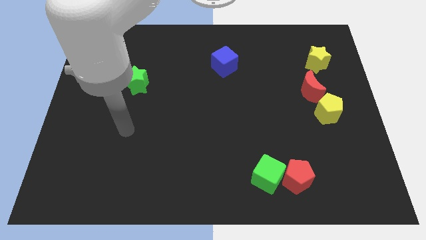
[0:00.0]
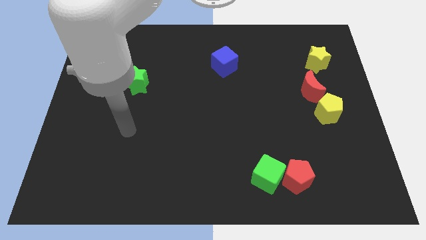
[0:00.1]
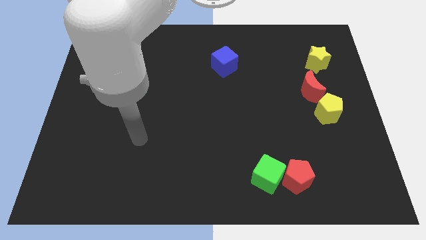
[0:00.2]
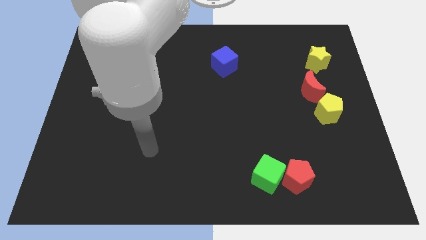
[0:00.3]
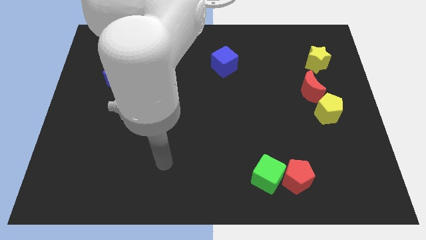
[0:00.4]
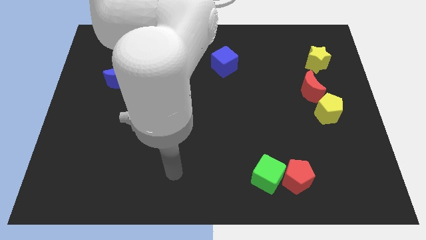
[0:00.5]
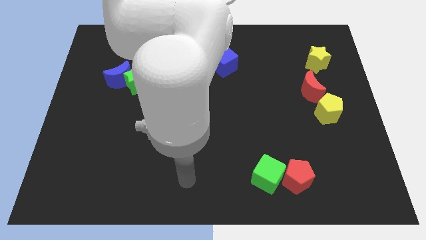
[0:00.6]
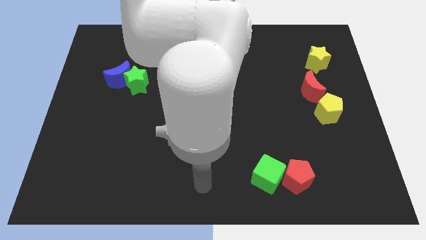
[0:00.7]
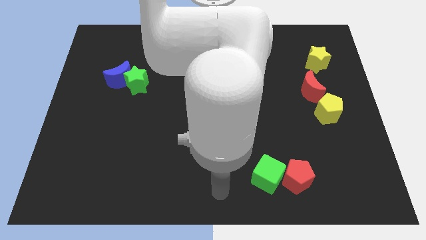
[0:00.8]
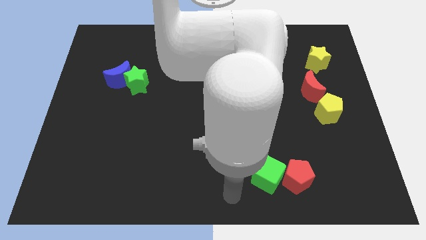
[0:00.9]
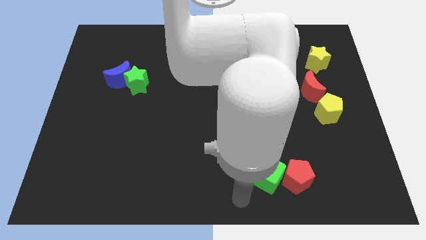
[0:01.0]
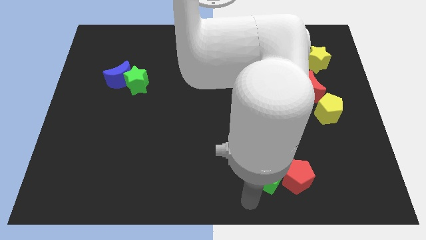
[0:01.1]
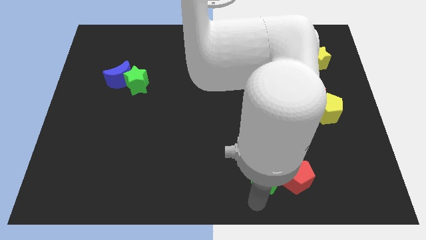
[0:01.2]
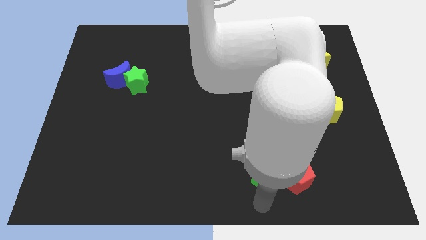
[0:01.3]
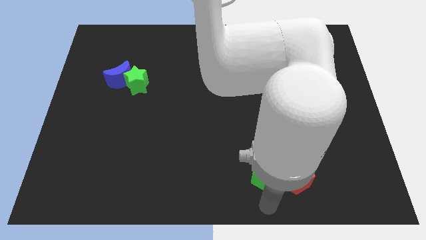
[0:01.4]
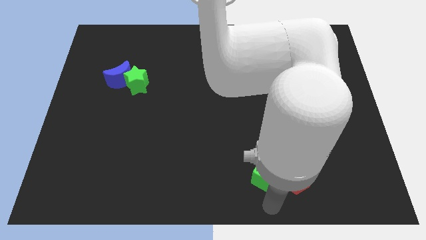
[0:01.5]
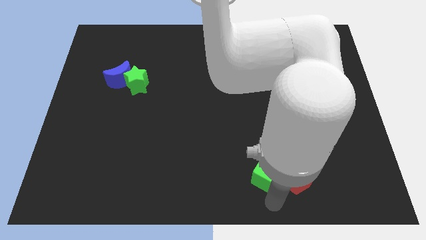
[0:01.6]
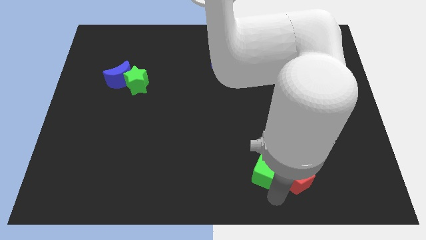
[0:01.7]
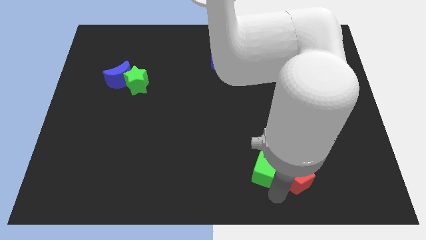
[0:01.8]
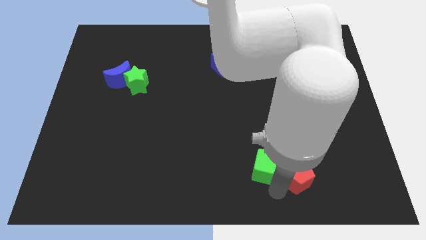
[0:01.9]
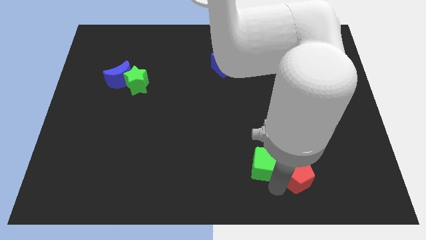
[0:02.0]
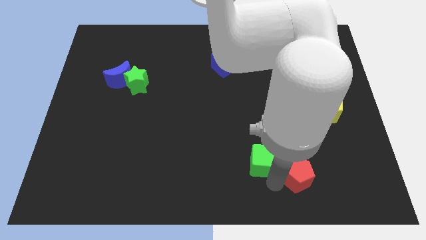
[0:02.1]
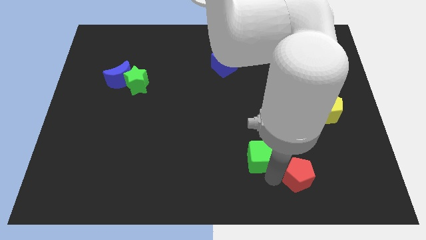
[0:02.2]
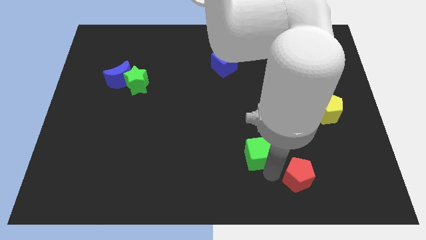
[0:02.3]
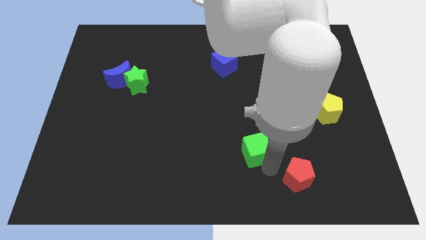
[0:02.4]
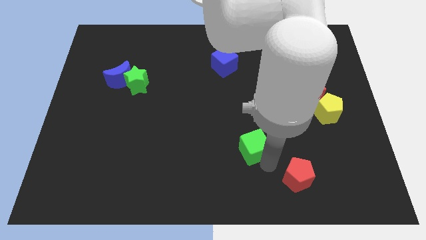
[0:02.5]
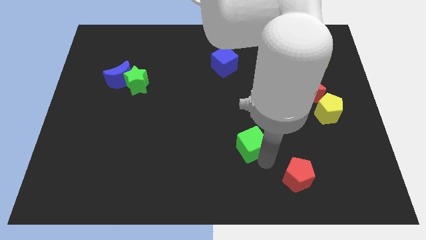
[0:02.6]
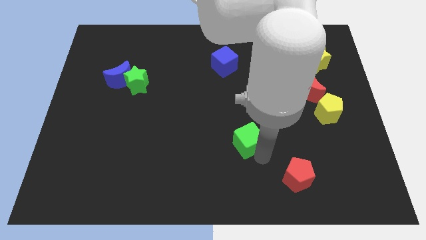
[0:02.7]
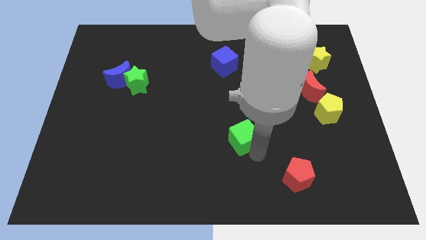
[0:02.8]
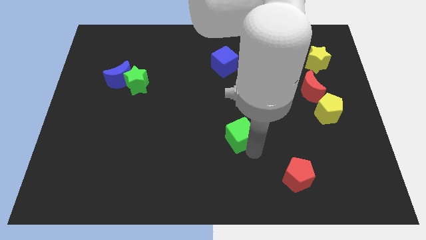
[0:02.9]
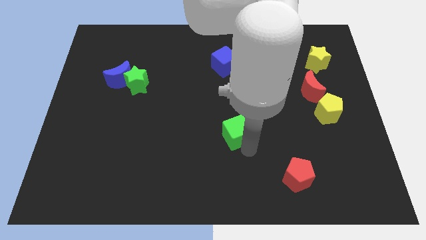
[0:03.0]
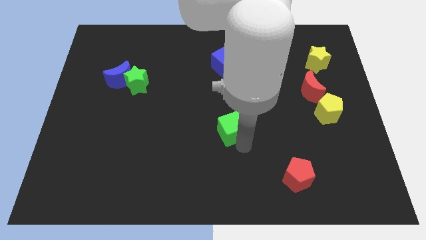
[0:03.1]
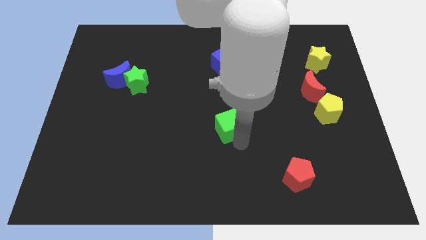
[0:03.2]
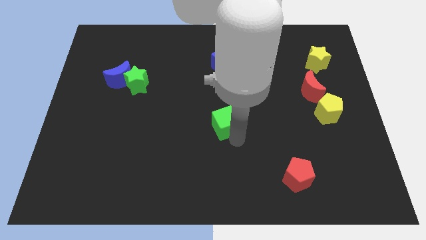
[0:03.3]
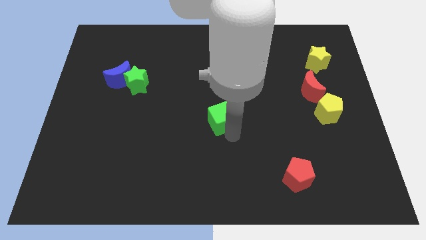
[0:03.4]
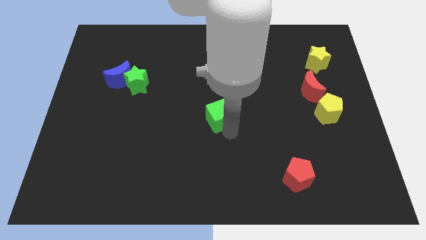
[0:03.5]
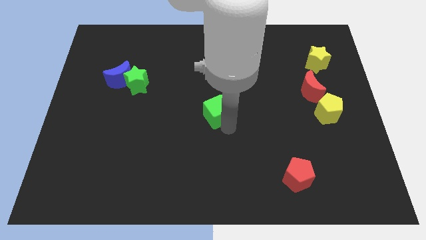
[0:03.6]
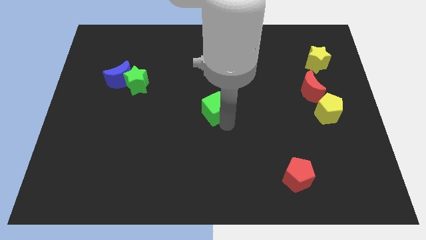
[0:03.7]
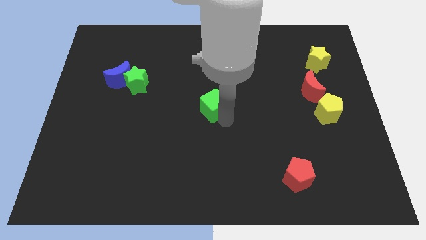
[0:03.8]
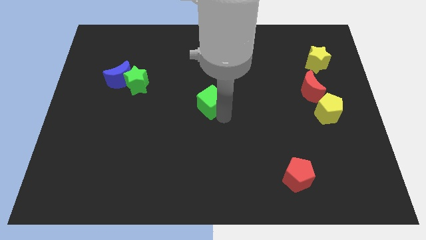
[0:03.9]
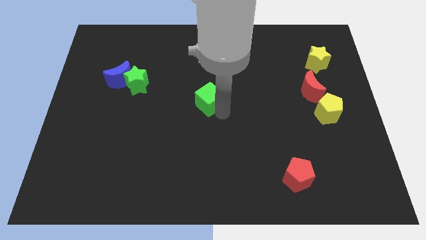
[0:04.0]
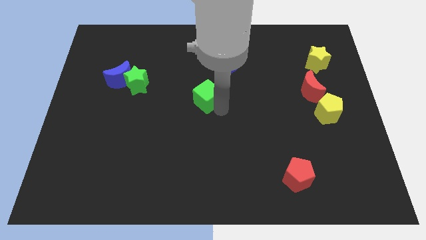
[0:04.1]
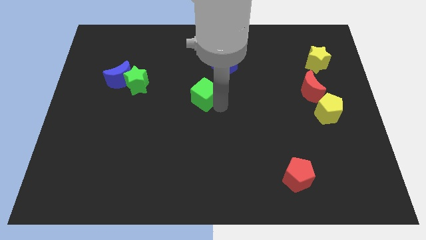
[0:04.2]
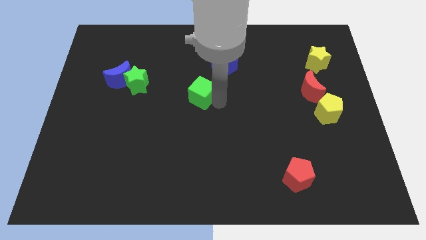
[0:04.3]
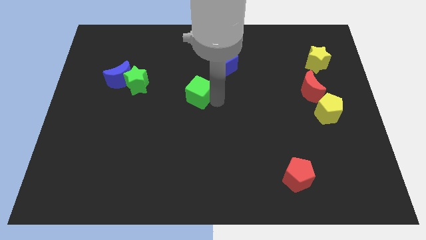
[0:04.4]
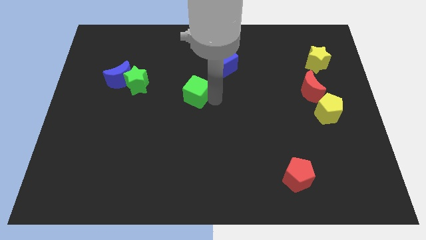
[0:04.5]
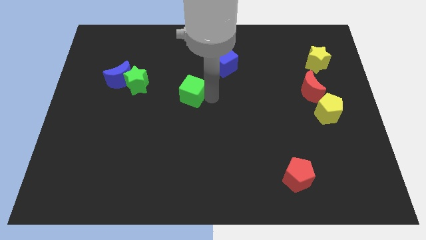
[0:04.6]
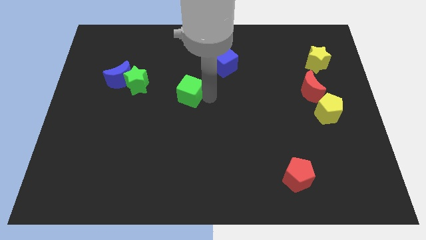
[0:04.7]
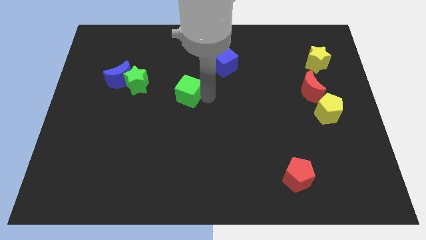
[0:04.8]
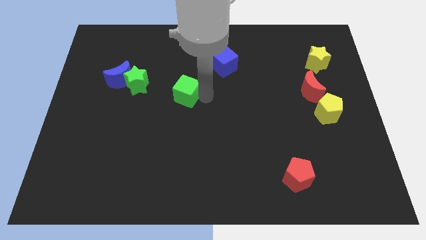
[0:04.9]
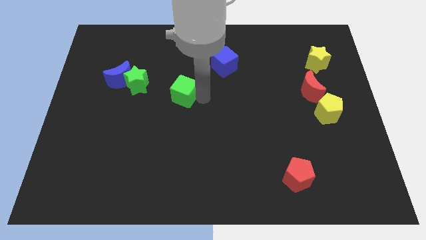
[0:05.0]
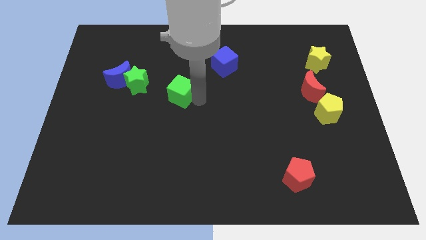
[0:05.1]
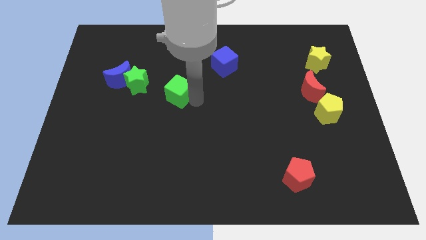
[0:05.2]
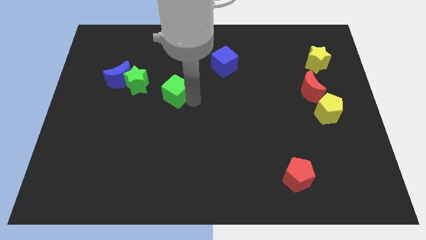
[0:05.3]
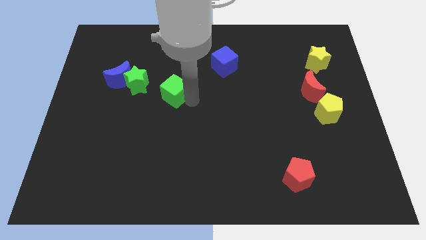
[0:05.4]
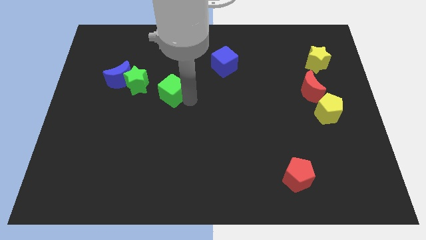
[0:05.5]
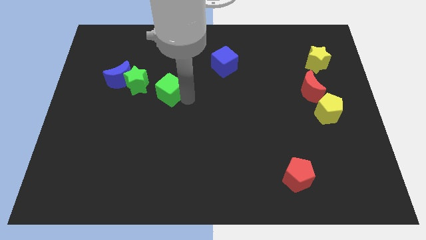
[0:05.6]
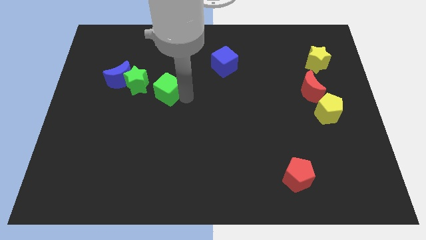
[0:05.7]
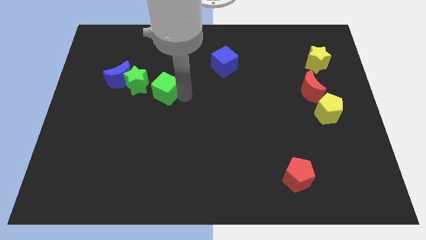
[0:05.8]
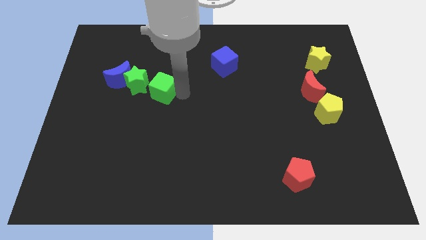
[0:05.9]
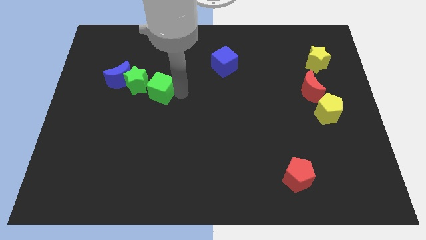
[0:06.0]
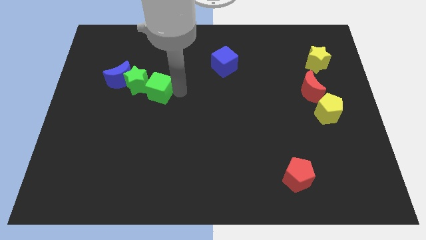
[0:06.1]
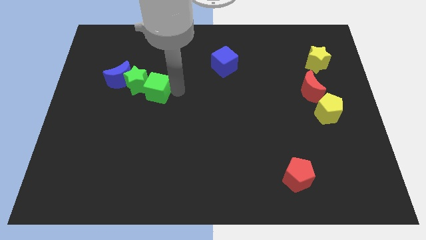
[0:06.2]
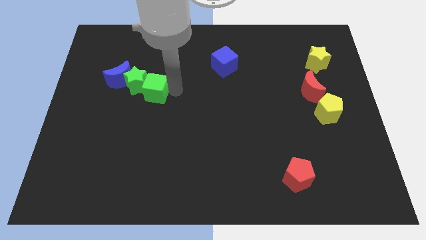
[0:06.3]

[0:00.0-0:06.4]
push the green cube towards the green star

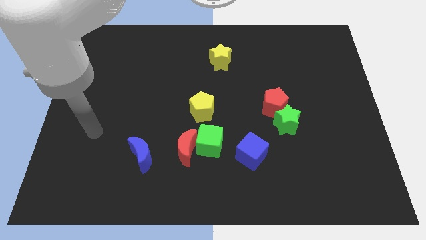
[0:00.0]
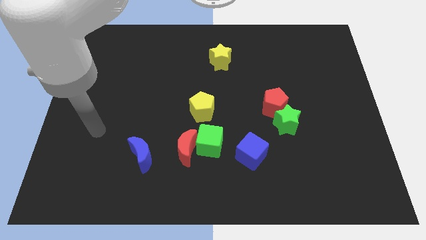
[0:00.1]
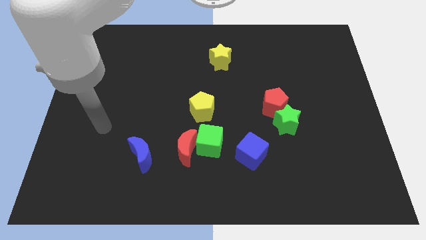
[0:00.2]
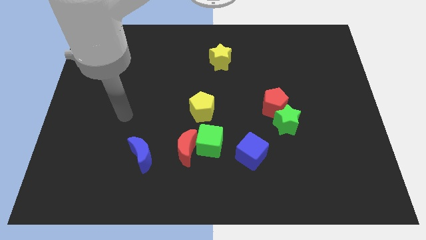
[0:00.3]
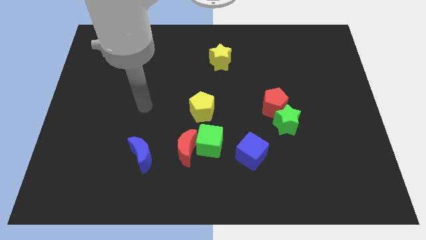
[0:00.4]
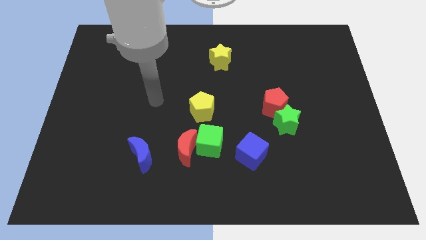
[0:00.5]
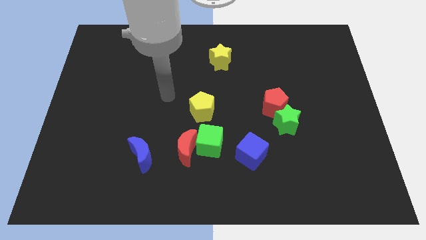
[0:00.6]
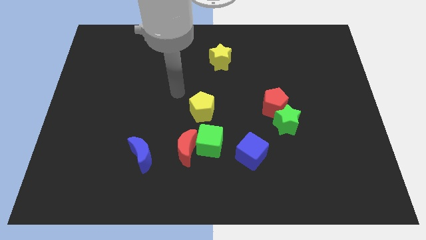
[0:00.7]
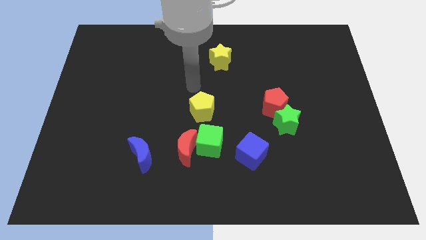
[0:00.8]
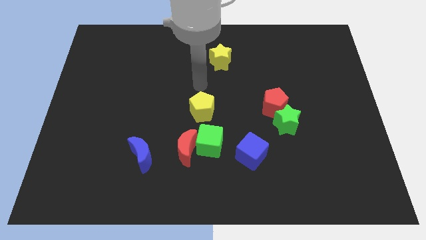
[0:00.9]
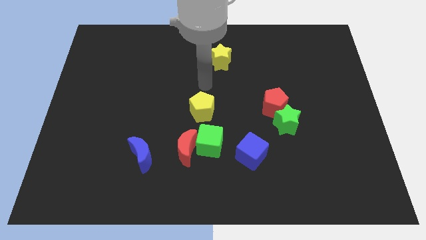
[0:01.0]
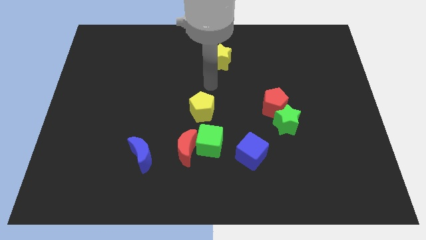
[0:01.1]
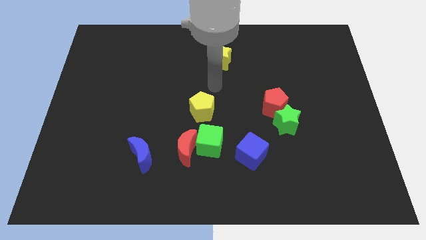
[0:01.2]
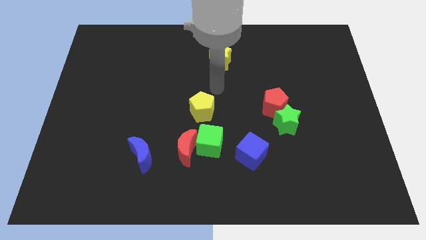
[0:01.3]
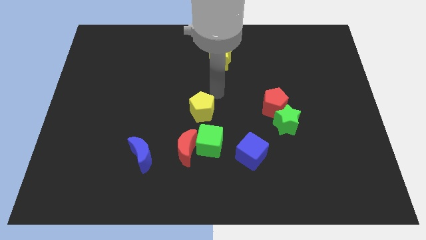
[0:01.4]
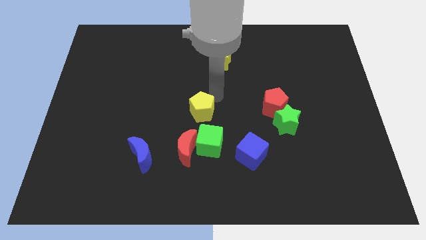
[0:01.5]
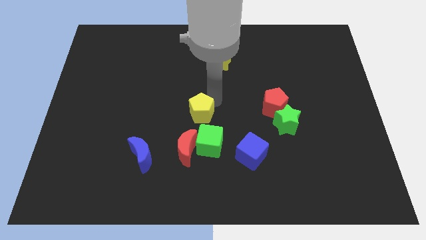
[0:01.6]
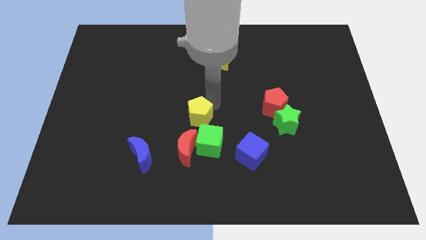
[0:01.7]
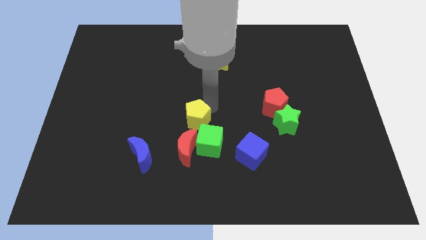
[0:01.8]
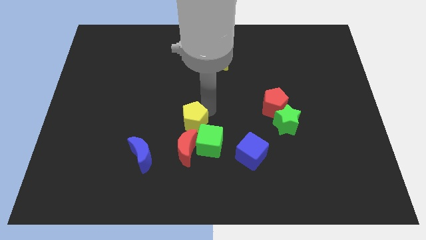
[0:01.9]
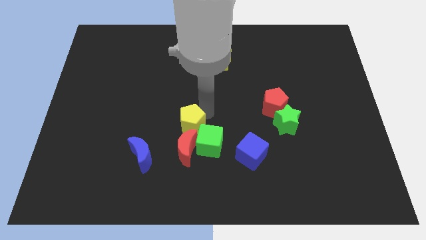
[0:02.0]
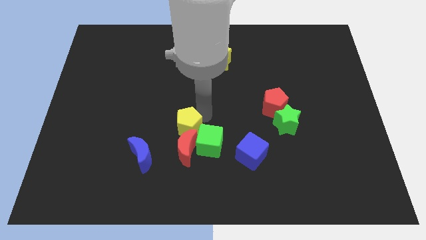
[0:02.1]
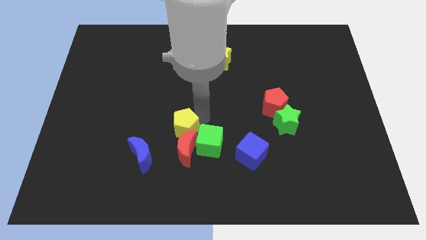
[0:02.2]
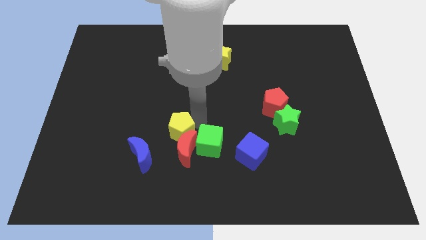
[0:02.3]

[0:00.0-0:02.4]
push the yellow pentagon towards the red moon
